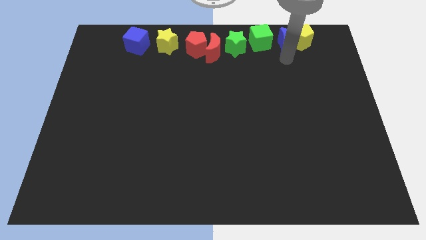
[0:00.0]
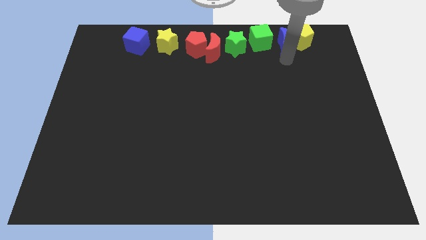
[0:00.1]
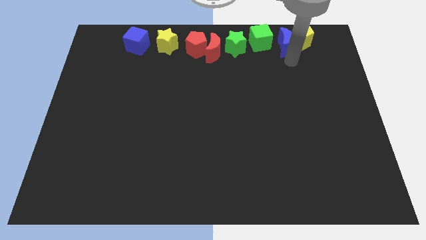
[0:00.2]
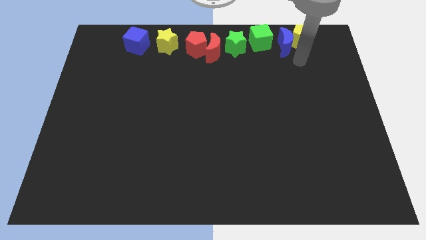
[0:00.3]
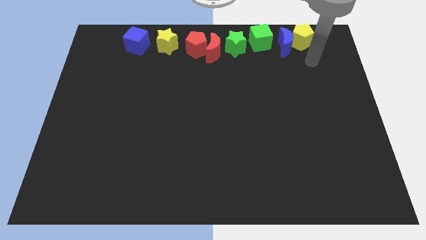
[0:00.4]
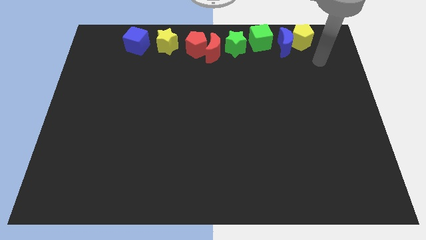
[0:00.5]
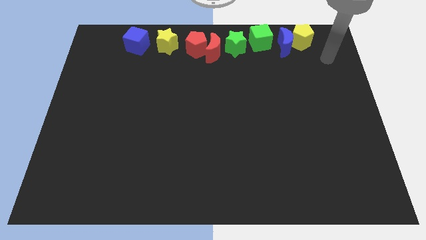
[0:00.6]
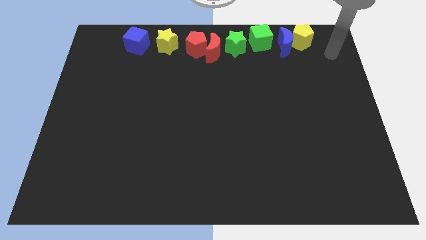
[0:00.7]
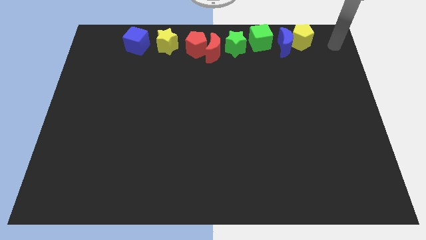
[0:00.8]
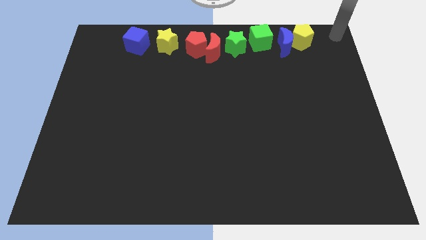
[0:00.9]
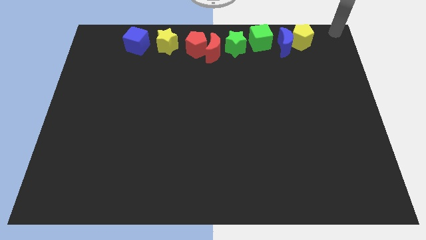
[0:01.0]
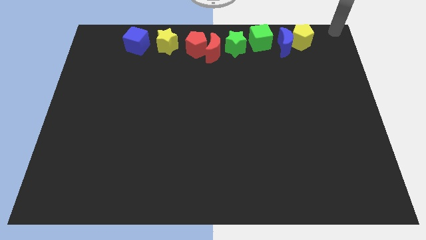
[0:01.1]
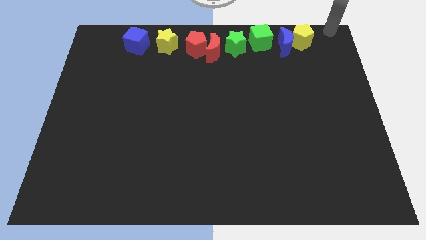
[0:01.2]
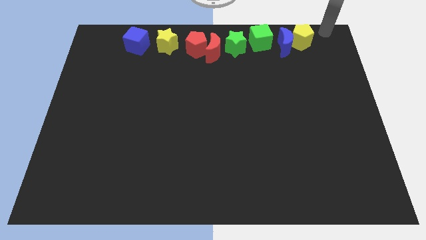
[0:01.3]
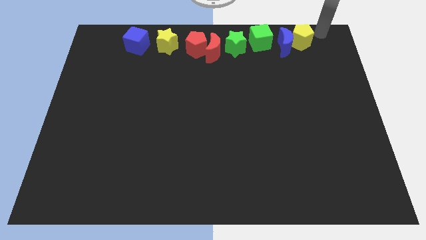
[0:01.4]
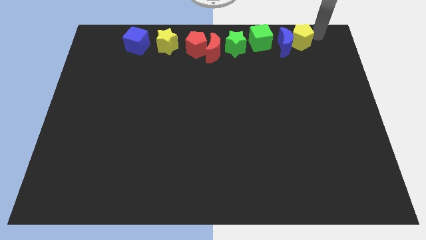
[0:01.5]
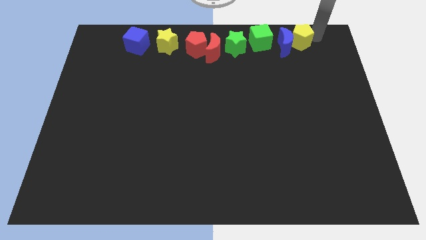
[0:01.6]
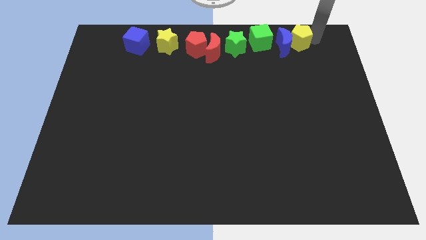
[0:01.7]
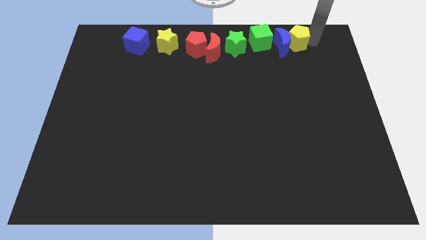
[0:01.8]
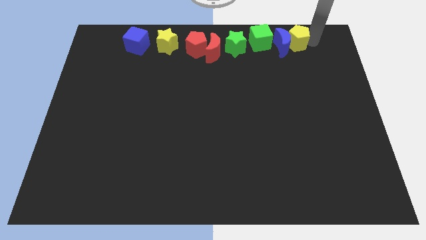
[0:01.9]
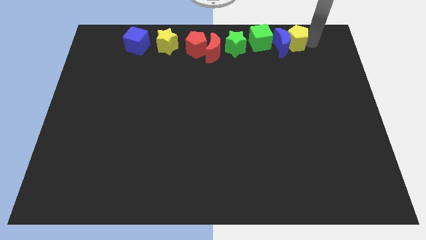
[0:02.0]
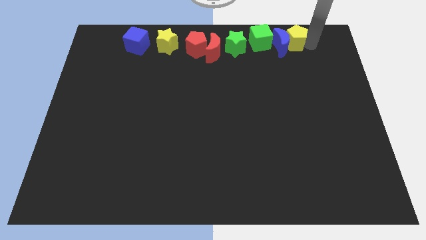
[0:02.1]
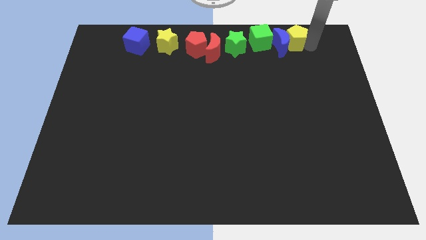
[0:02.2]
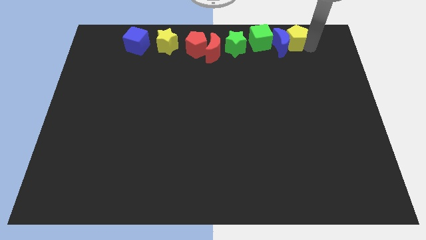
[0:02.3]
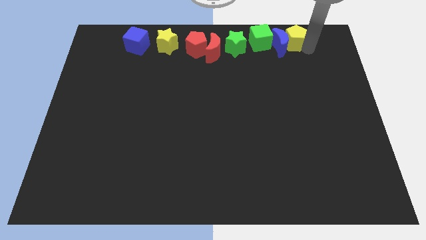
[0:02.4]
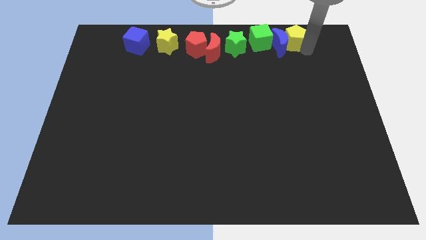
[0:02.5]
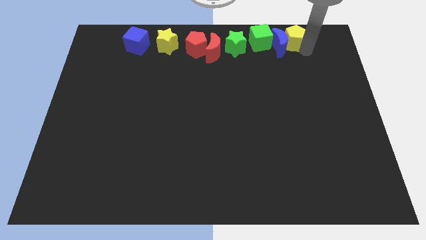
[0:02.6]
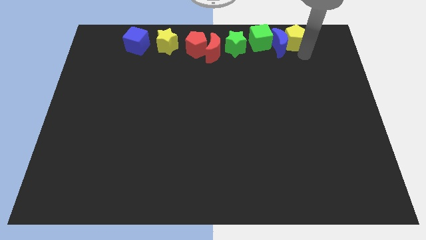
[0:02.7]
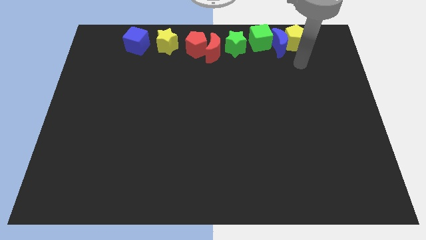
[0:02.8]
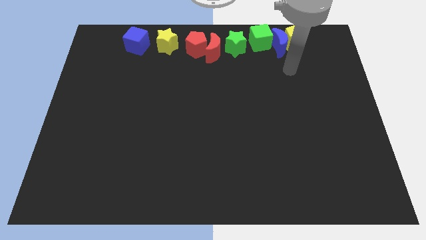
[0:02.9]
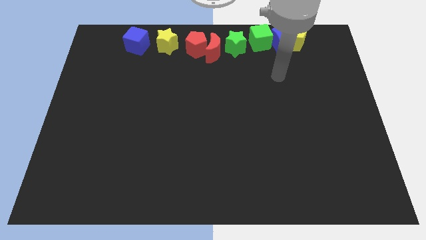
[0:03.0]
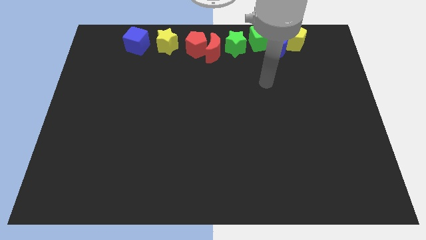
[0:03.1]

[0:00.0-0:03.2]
push the yellow pentagon into the blue moon

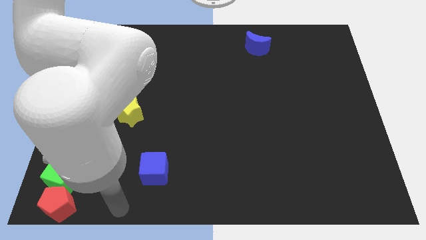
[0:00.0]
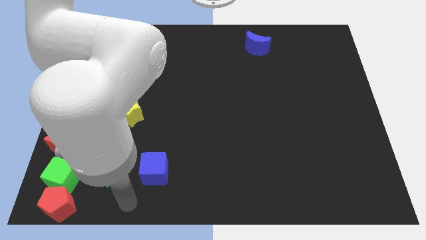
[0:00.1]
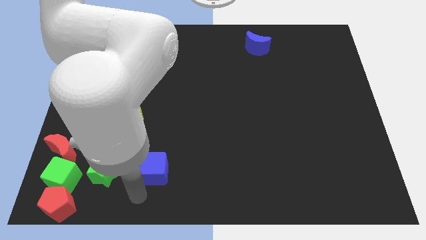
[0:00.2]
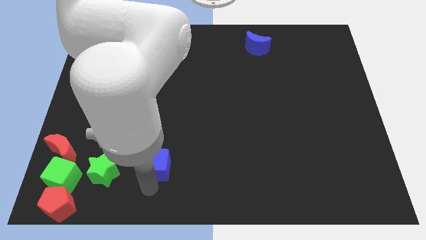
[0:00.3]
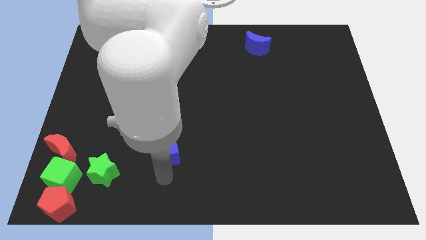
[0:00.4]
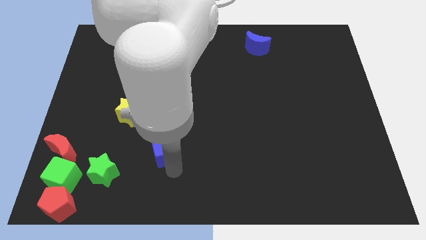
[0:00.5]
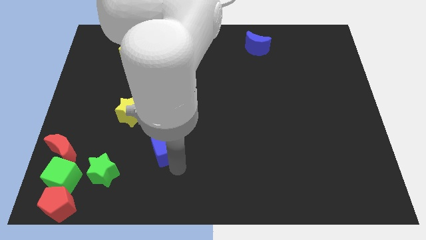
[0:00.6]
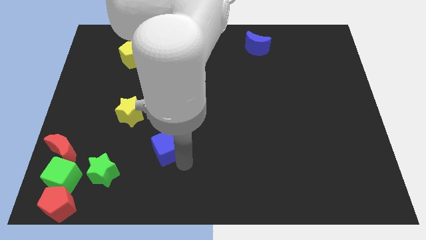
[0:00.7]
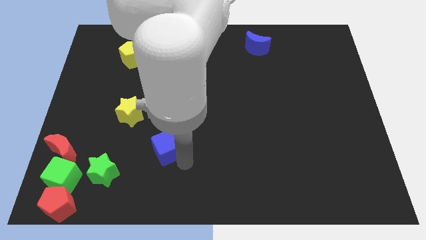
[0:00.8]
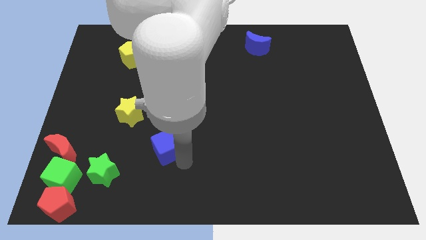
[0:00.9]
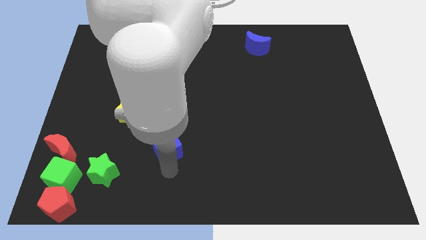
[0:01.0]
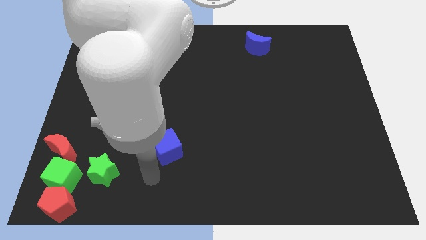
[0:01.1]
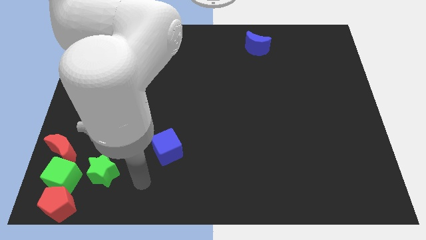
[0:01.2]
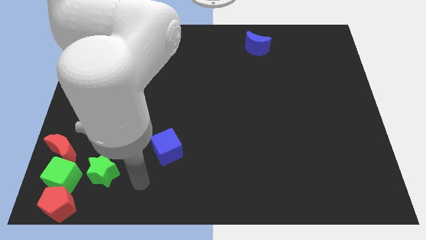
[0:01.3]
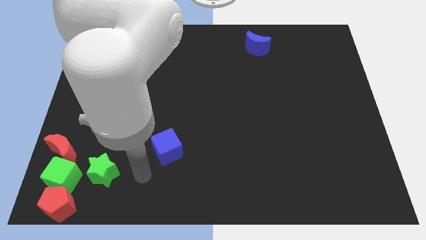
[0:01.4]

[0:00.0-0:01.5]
place blue cube diagonally at the bottom right to the yellow star

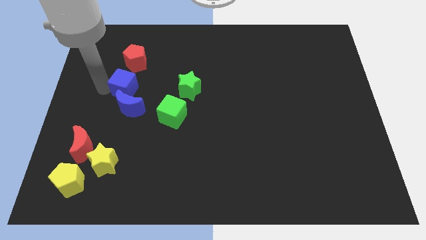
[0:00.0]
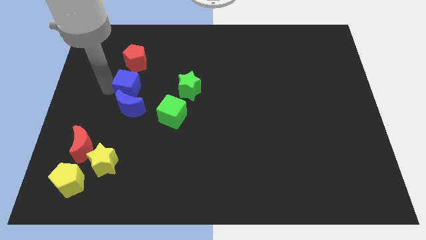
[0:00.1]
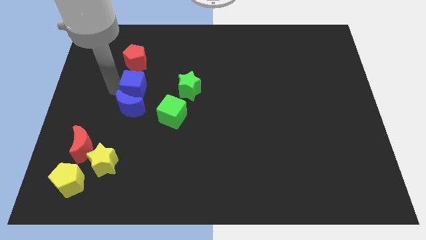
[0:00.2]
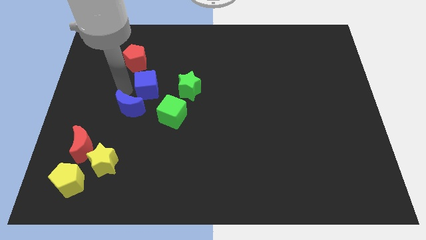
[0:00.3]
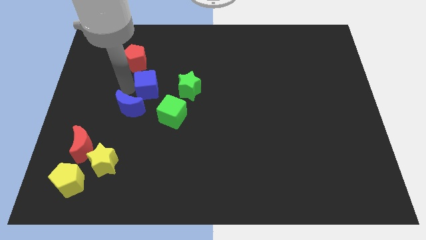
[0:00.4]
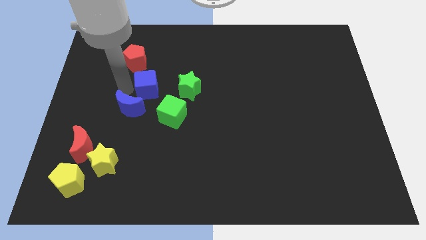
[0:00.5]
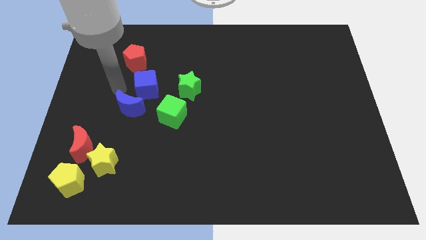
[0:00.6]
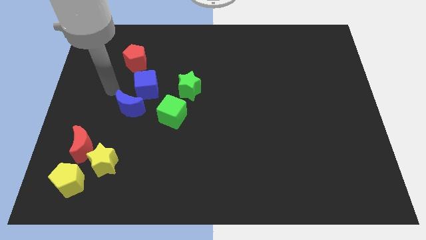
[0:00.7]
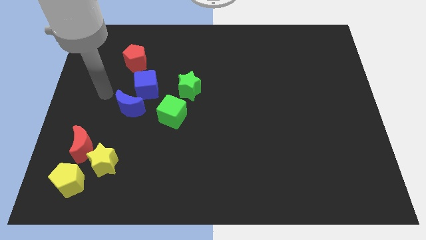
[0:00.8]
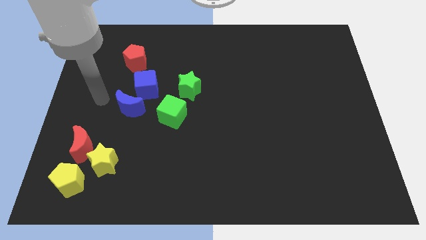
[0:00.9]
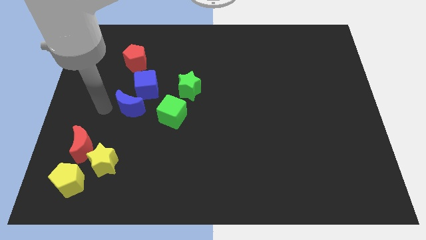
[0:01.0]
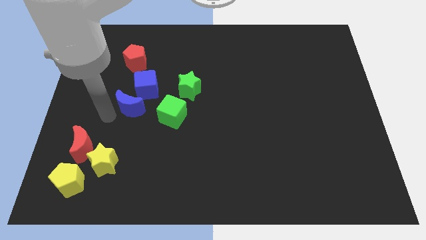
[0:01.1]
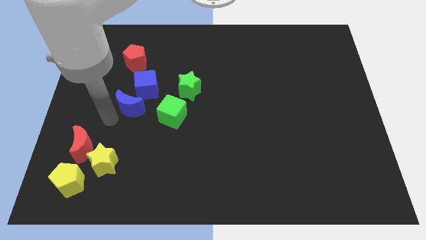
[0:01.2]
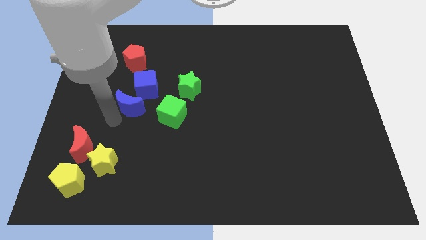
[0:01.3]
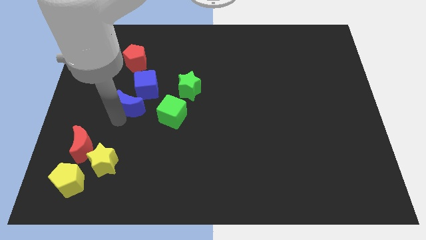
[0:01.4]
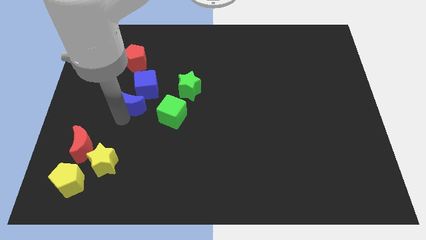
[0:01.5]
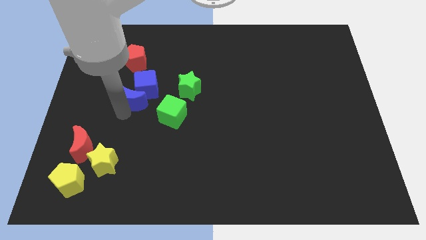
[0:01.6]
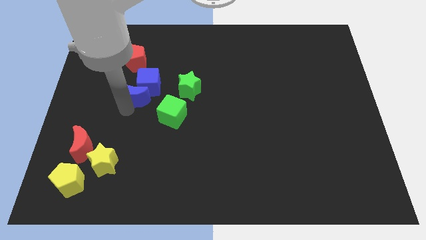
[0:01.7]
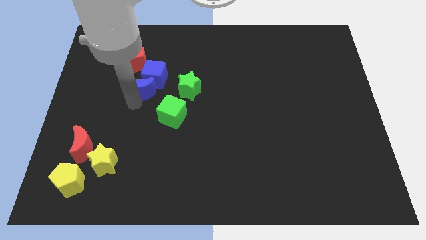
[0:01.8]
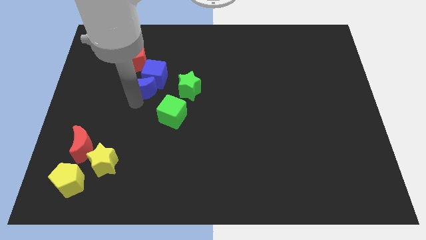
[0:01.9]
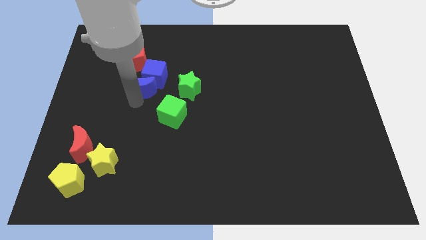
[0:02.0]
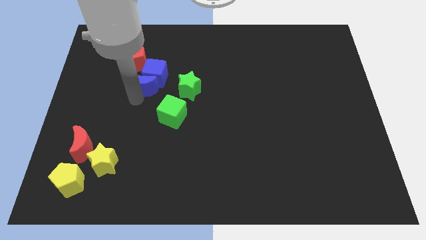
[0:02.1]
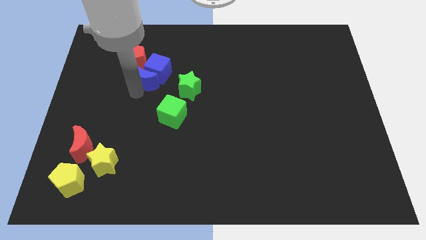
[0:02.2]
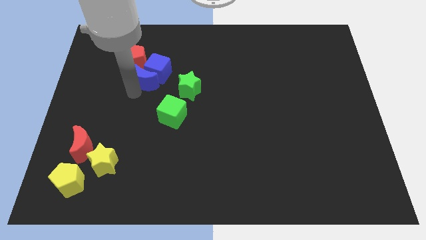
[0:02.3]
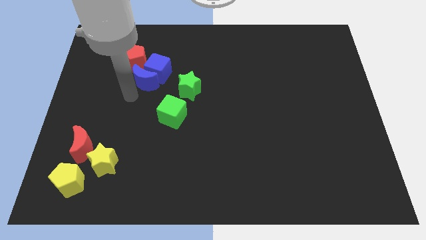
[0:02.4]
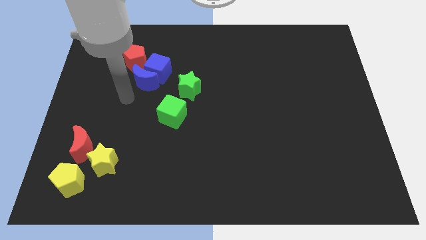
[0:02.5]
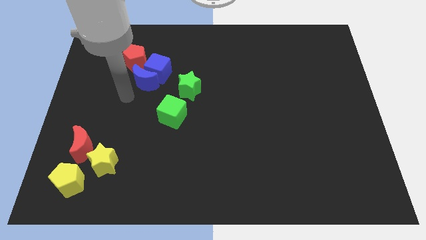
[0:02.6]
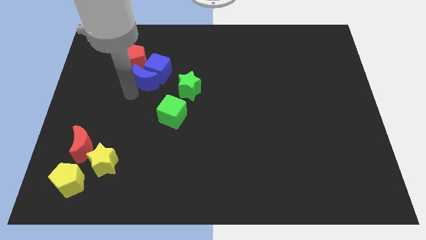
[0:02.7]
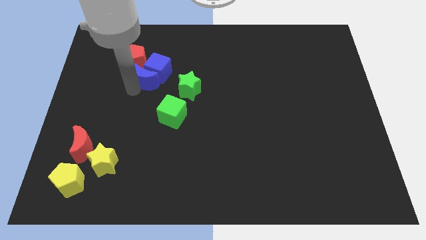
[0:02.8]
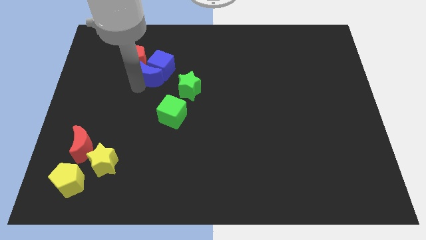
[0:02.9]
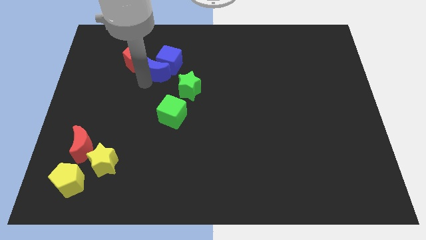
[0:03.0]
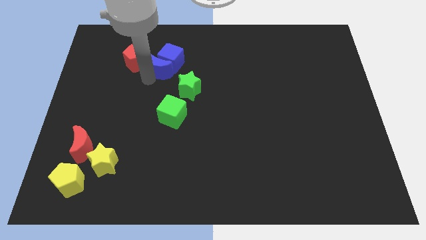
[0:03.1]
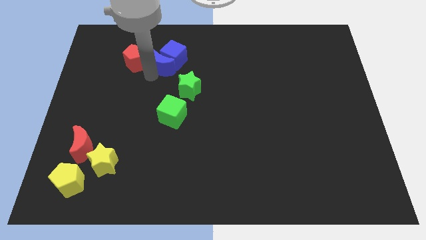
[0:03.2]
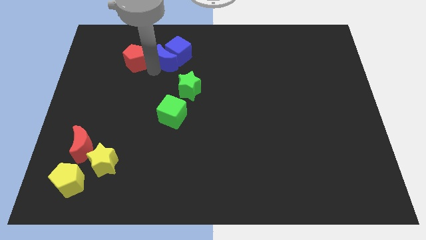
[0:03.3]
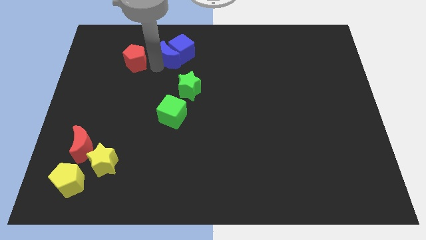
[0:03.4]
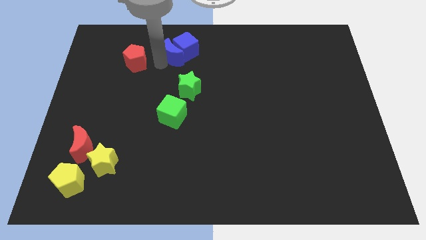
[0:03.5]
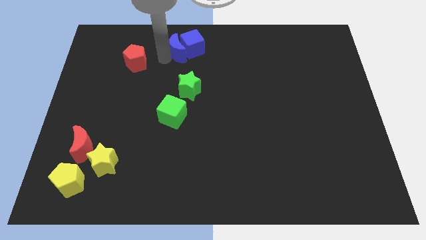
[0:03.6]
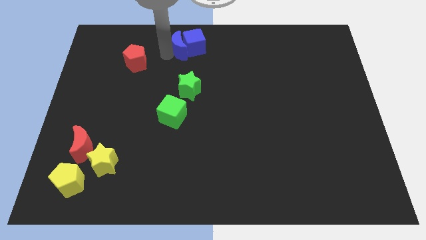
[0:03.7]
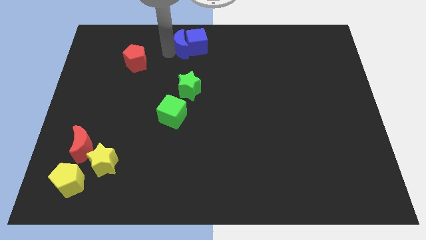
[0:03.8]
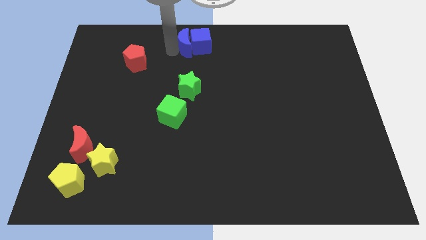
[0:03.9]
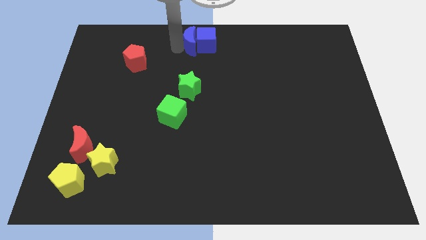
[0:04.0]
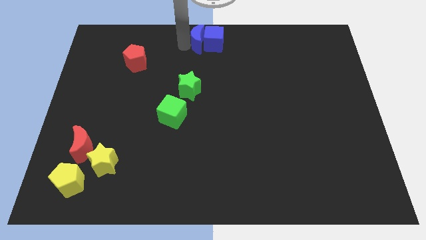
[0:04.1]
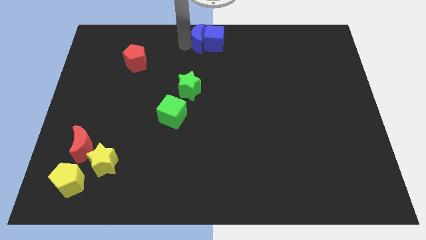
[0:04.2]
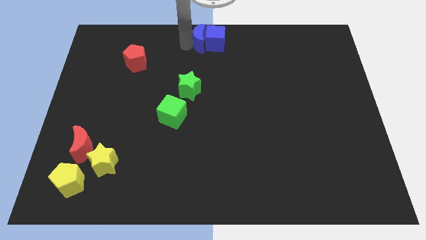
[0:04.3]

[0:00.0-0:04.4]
push the blue crescent and blue cube to the top center of the board
